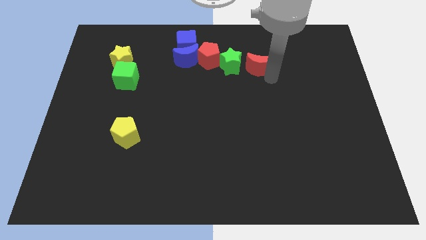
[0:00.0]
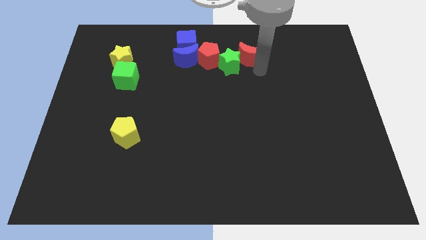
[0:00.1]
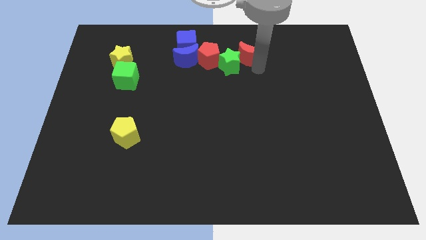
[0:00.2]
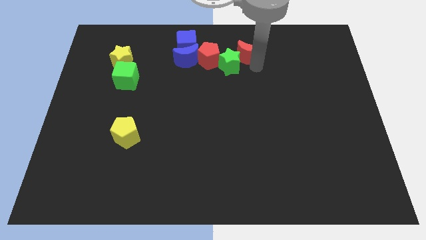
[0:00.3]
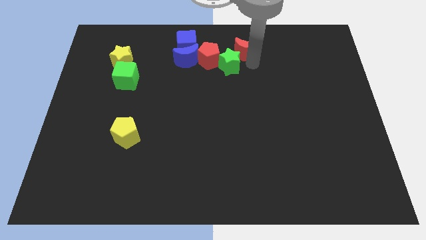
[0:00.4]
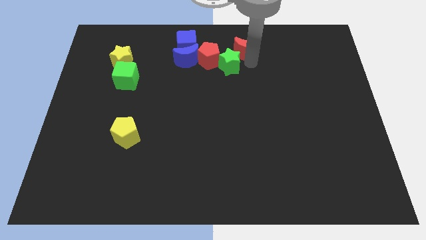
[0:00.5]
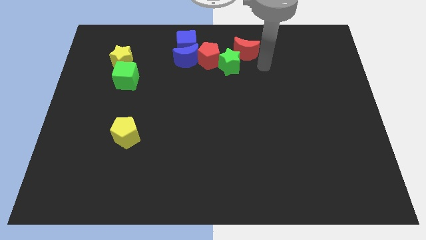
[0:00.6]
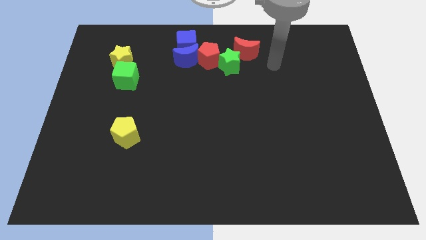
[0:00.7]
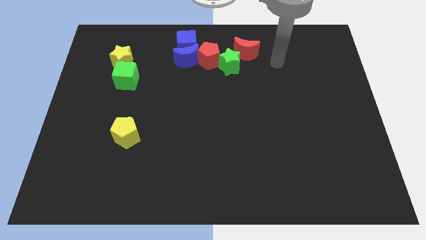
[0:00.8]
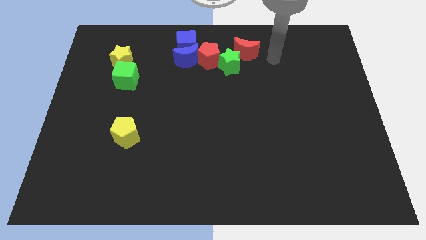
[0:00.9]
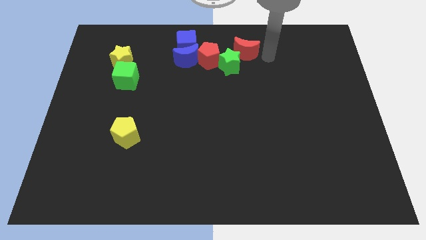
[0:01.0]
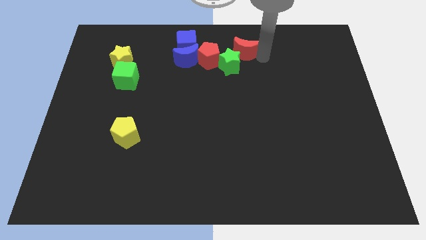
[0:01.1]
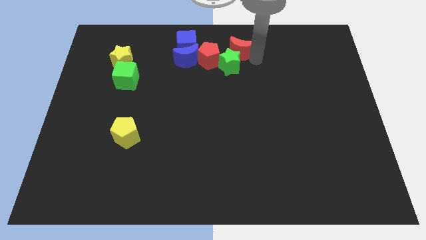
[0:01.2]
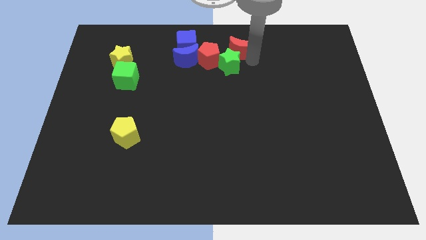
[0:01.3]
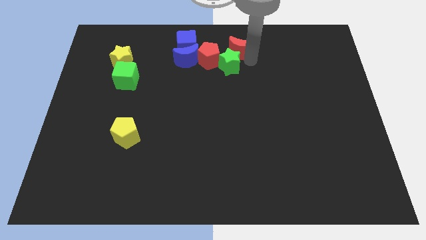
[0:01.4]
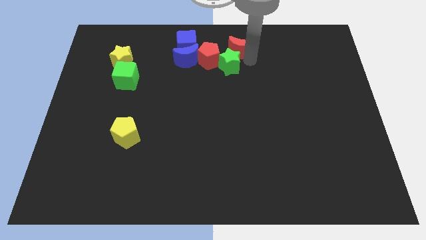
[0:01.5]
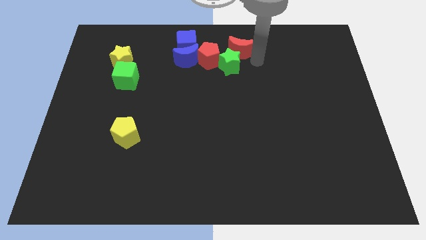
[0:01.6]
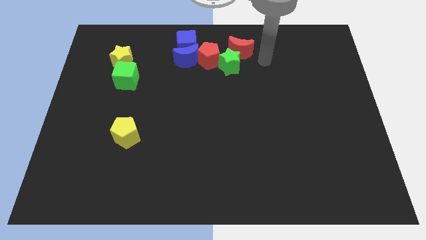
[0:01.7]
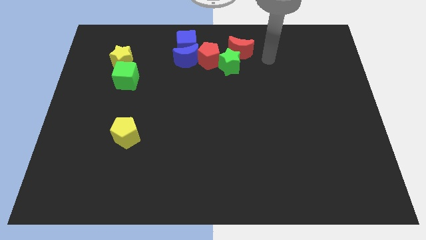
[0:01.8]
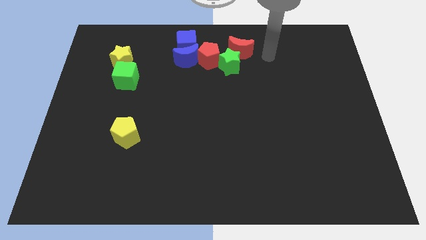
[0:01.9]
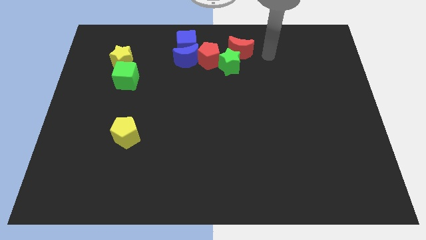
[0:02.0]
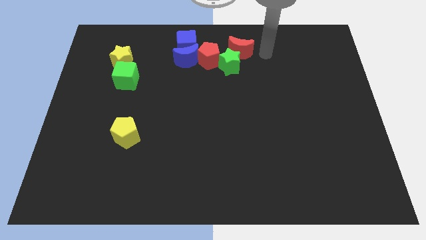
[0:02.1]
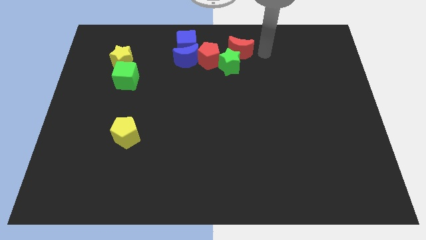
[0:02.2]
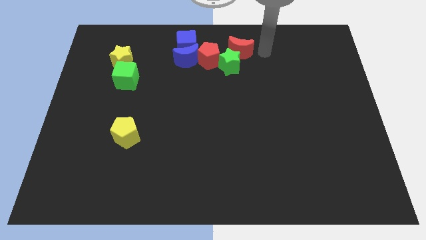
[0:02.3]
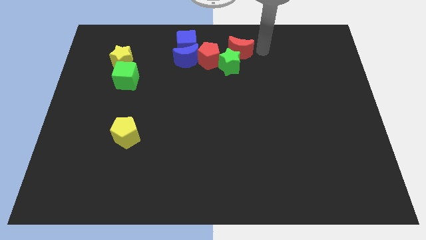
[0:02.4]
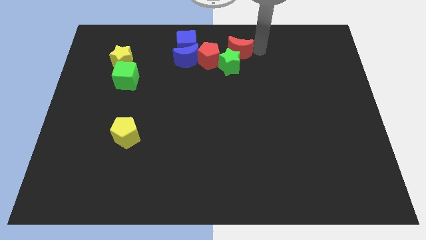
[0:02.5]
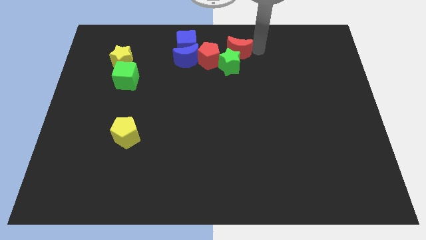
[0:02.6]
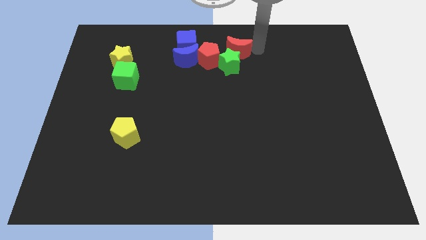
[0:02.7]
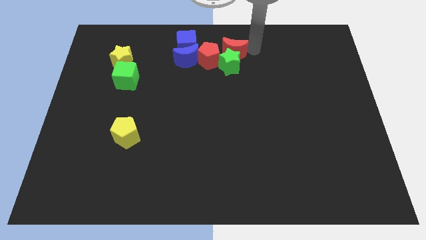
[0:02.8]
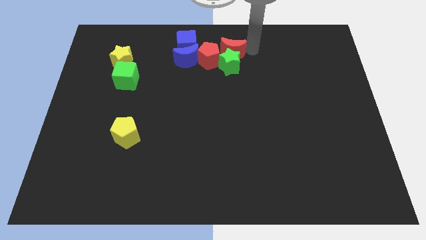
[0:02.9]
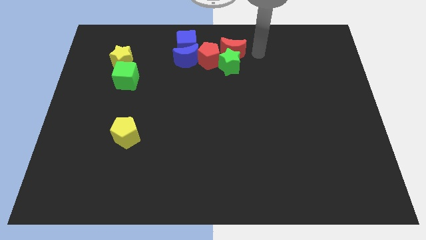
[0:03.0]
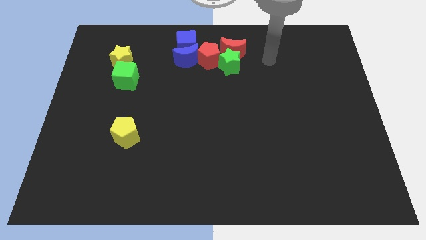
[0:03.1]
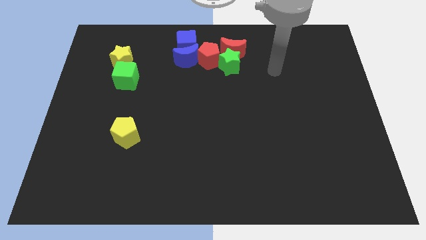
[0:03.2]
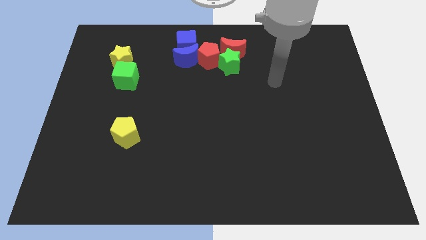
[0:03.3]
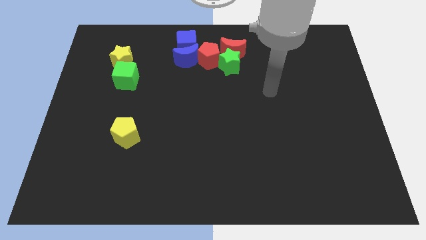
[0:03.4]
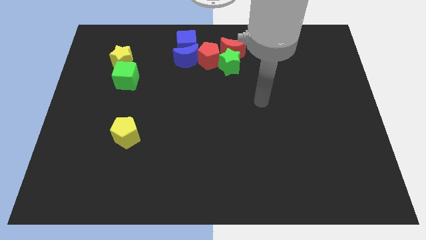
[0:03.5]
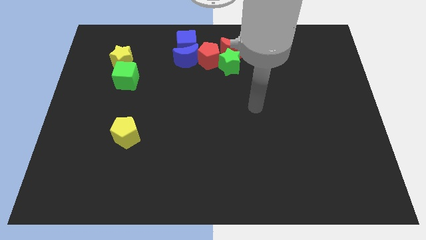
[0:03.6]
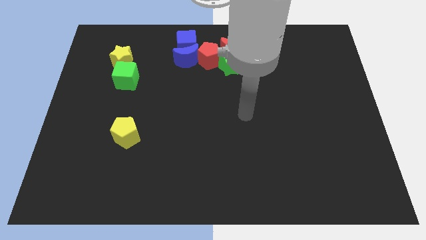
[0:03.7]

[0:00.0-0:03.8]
place the red moon above the green star

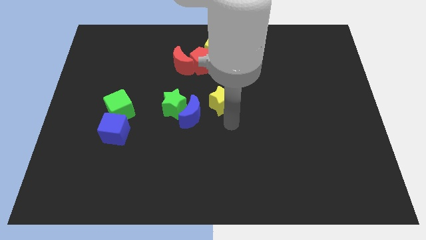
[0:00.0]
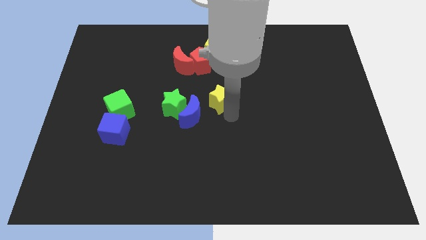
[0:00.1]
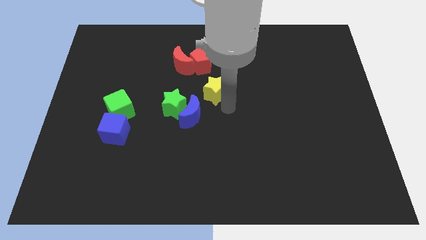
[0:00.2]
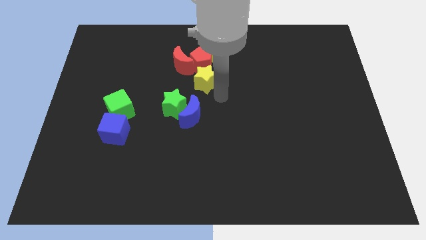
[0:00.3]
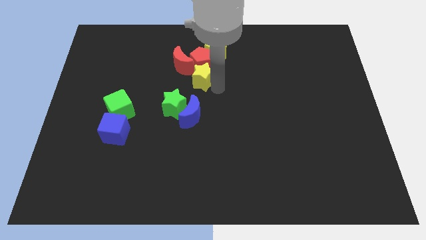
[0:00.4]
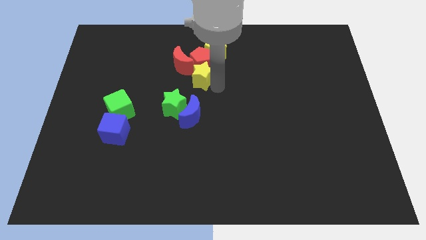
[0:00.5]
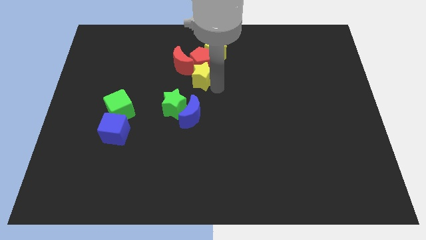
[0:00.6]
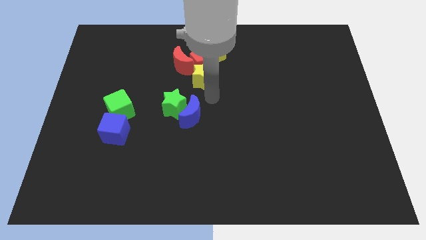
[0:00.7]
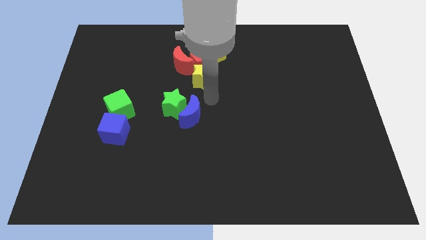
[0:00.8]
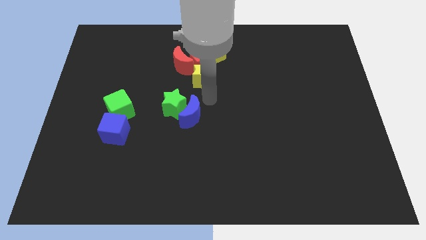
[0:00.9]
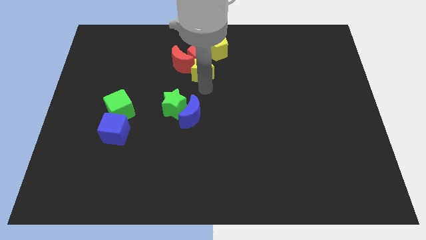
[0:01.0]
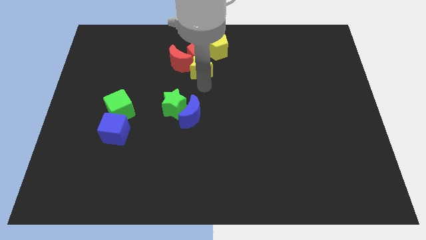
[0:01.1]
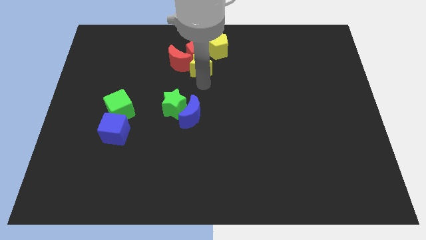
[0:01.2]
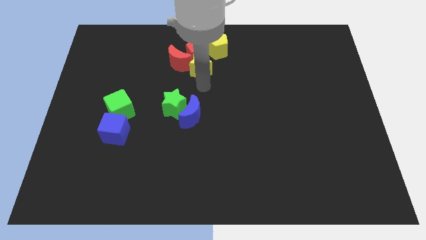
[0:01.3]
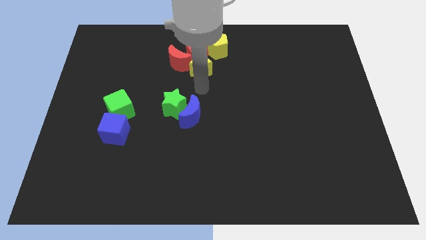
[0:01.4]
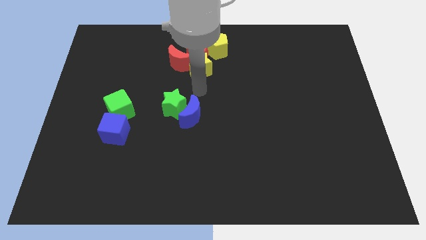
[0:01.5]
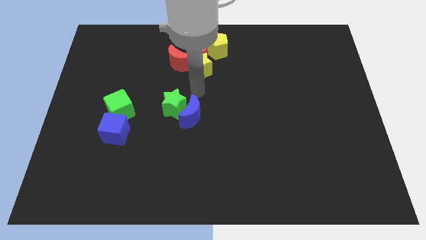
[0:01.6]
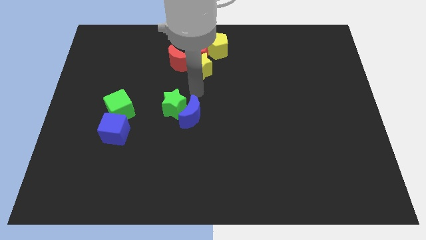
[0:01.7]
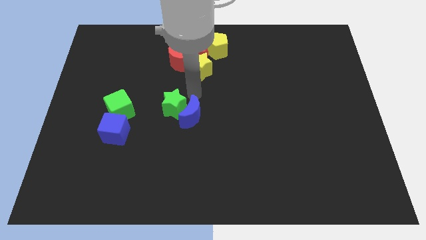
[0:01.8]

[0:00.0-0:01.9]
push the yellow star below the red blocks diagonally

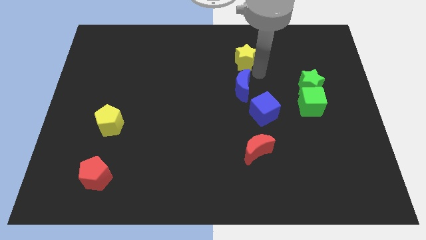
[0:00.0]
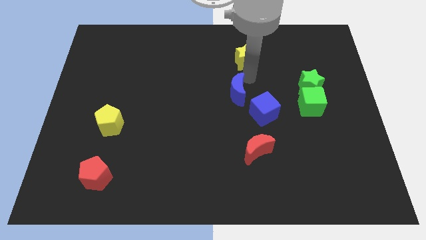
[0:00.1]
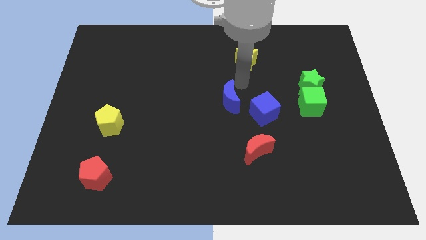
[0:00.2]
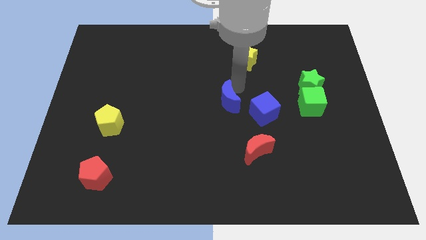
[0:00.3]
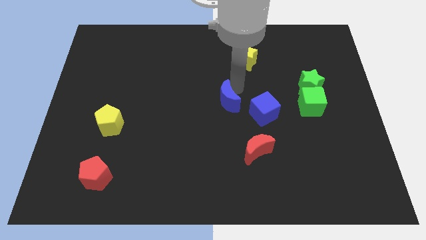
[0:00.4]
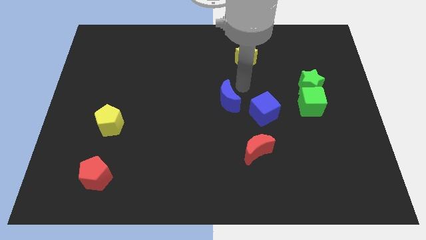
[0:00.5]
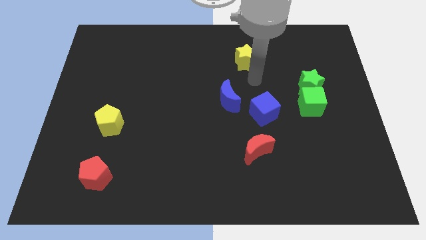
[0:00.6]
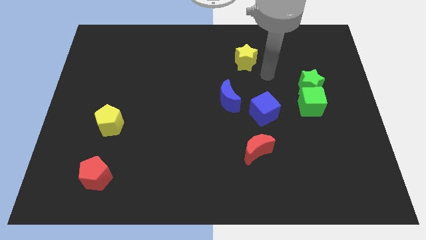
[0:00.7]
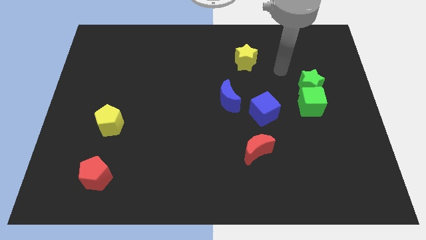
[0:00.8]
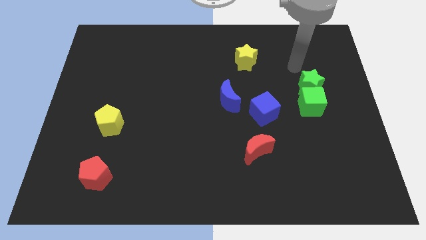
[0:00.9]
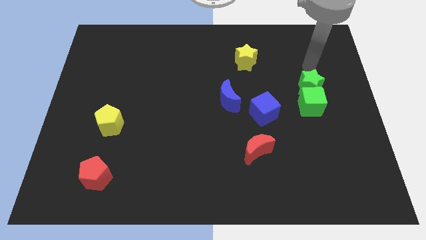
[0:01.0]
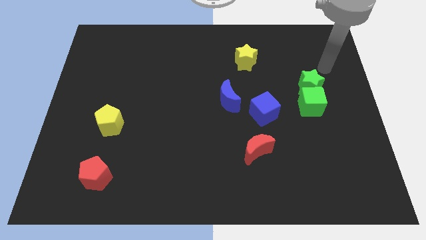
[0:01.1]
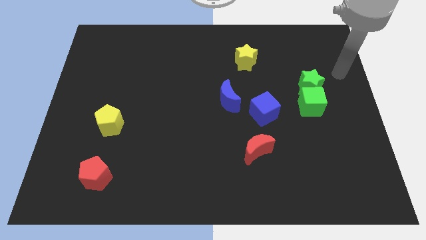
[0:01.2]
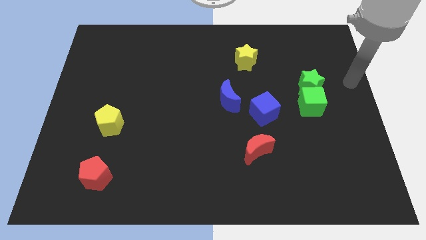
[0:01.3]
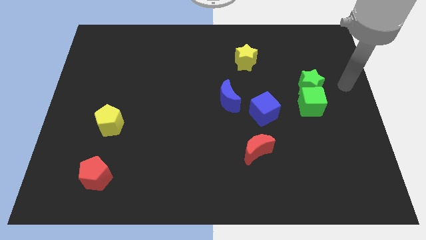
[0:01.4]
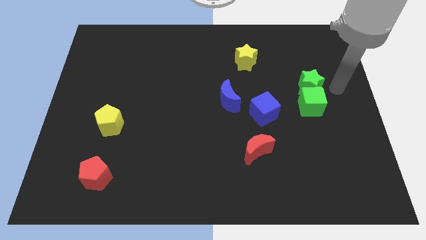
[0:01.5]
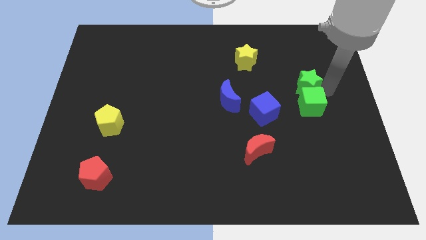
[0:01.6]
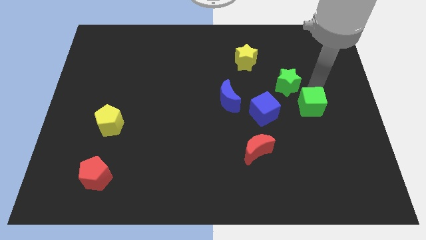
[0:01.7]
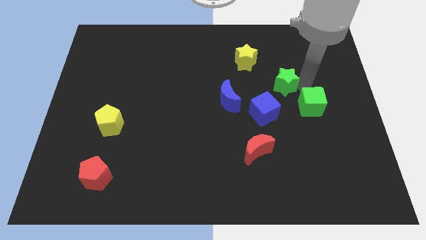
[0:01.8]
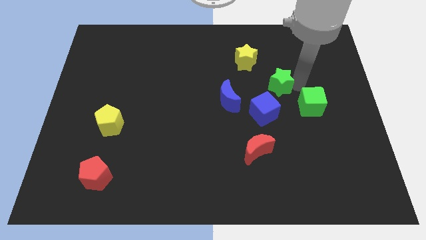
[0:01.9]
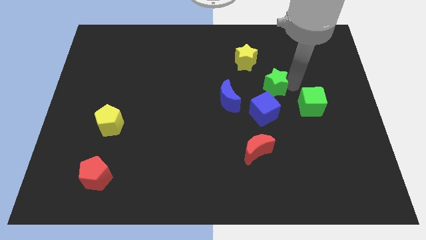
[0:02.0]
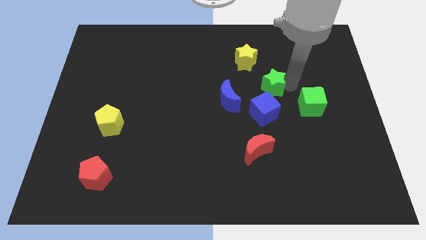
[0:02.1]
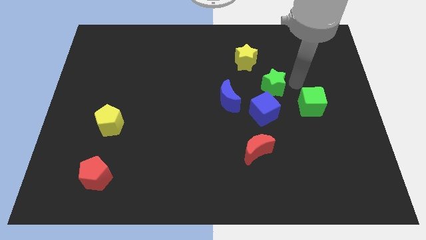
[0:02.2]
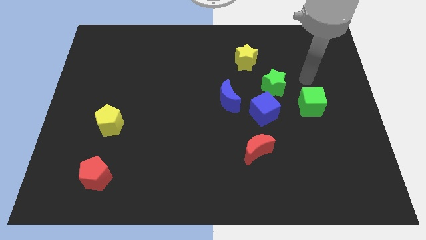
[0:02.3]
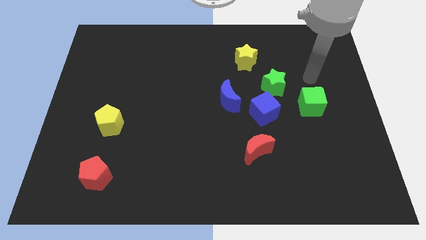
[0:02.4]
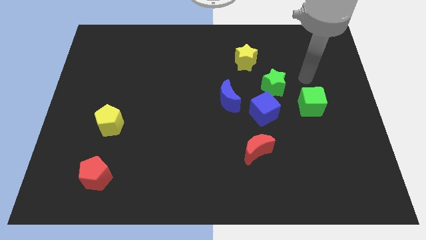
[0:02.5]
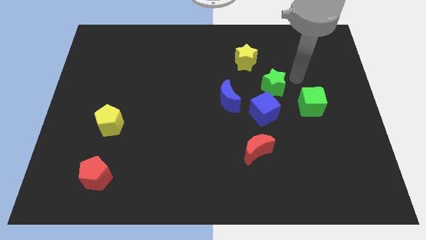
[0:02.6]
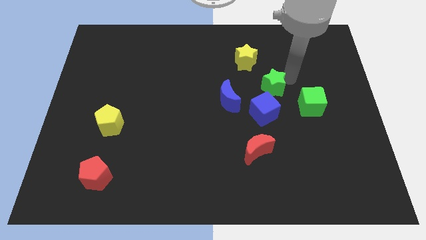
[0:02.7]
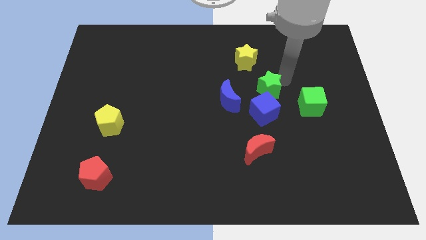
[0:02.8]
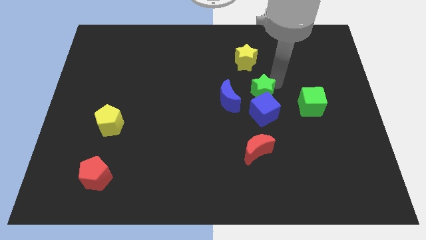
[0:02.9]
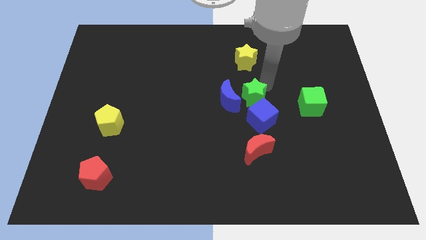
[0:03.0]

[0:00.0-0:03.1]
move the green star above the blue cube
